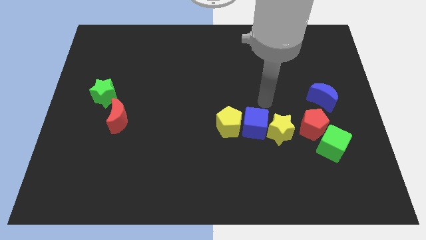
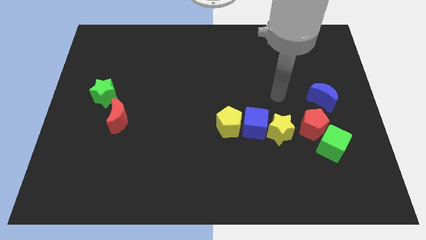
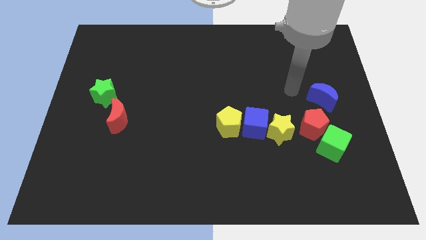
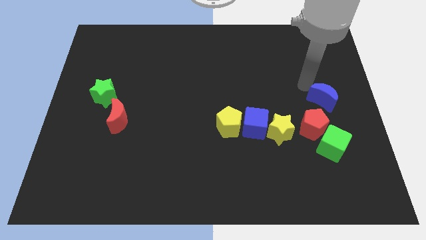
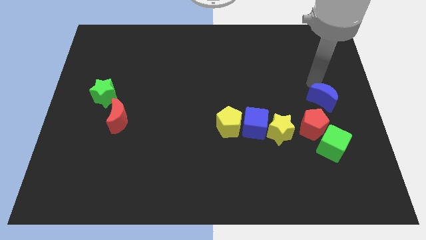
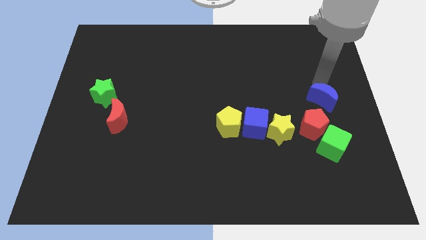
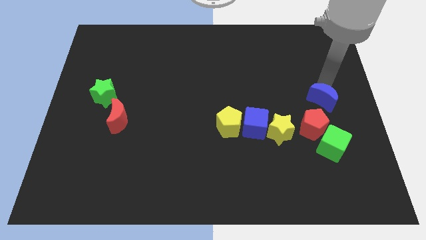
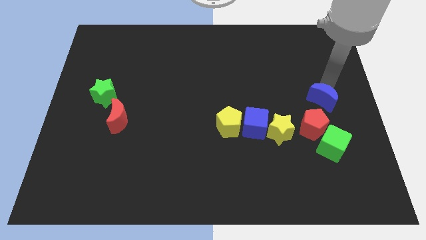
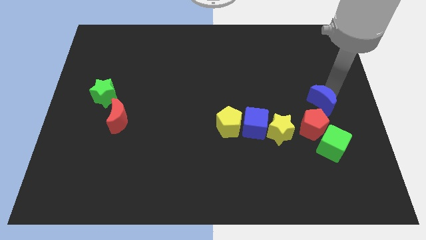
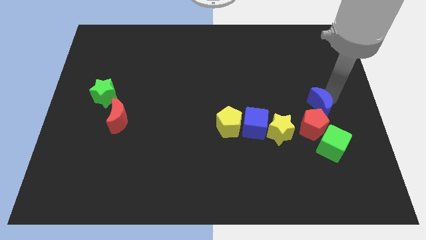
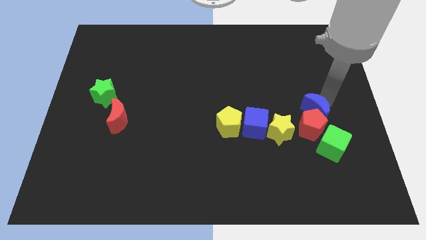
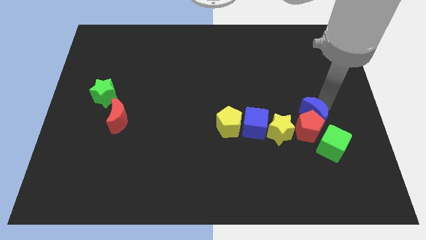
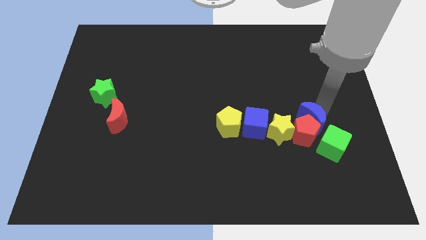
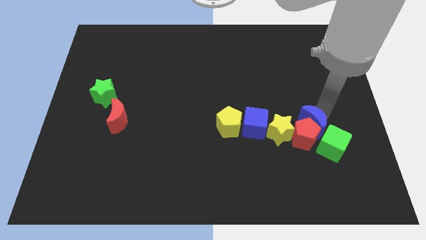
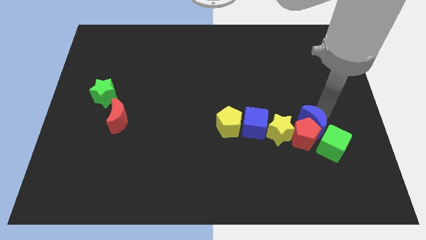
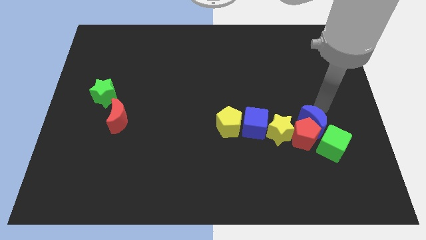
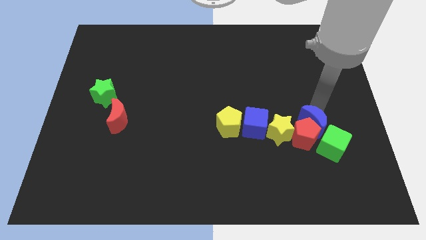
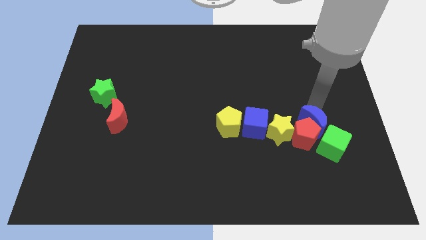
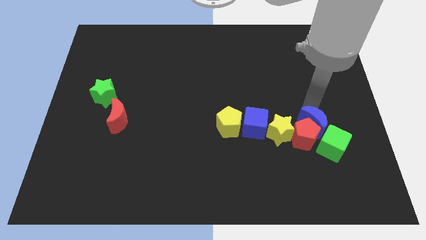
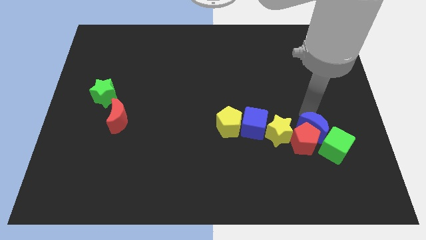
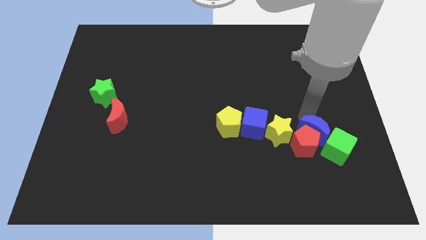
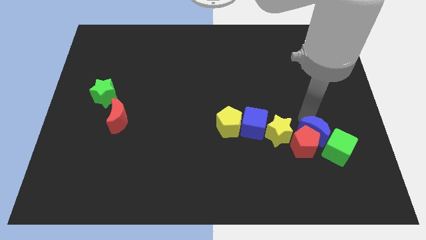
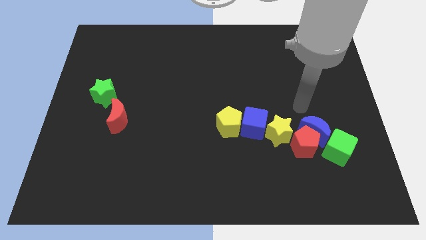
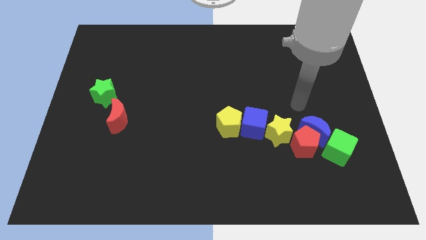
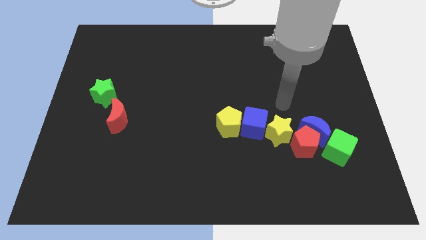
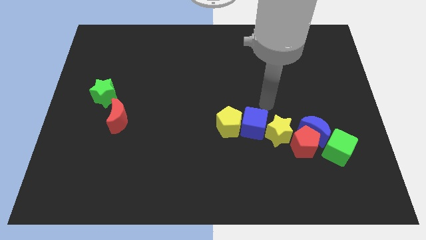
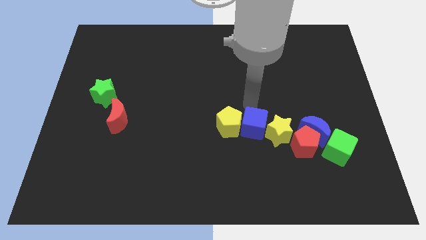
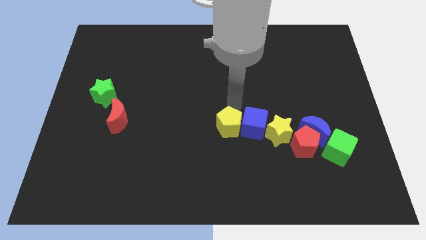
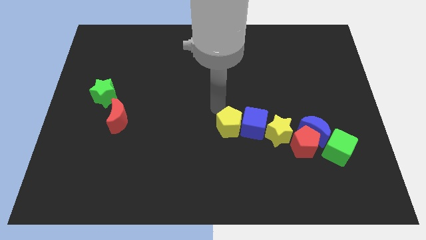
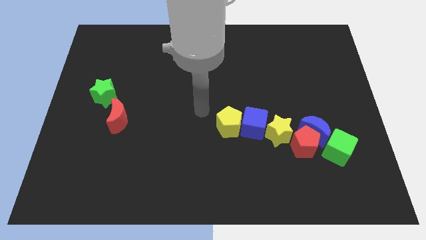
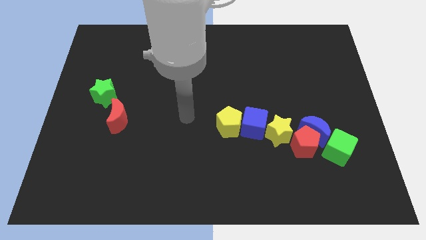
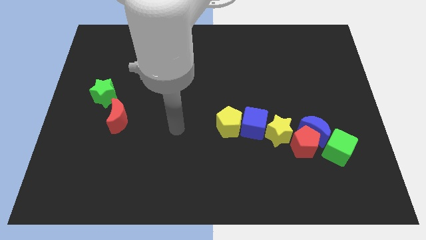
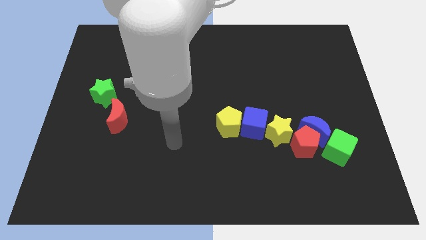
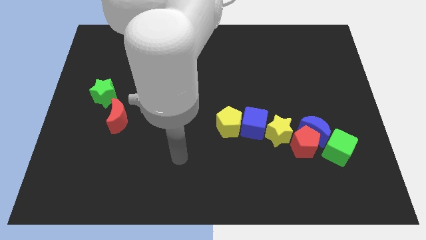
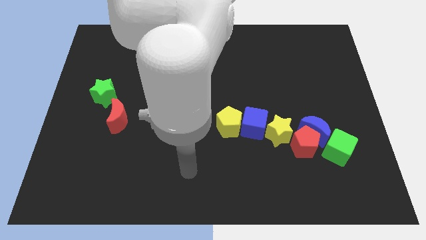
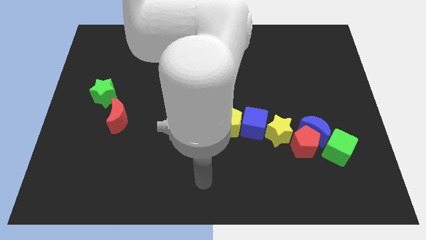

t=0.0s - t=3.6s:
push the blue moon into the red pentagon

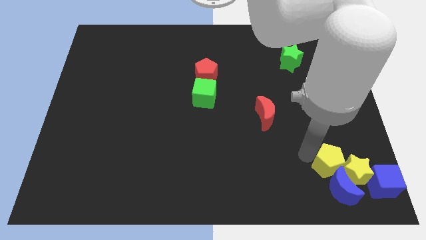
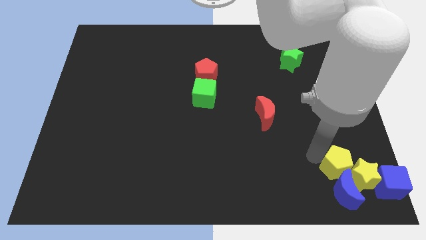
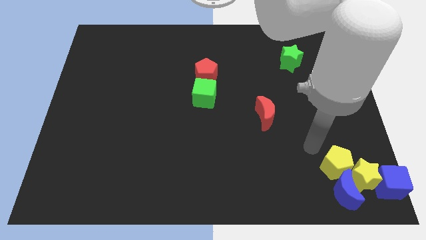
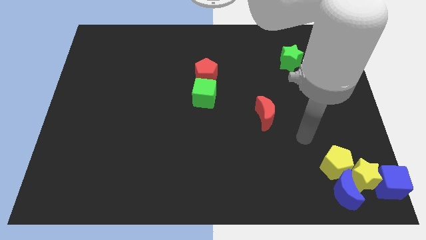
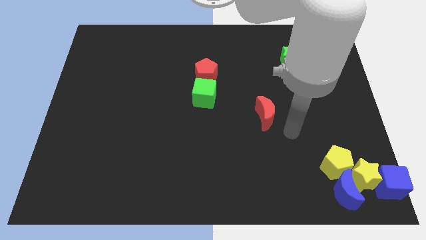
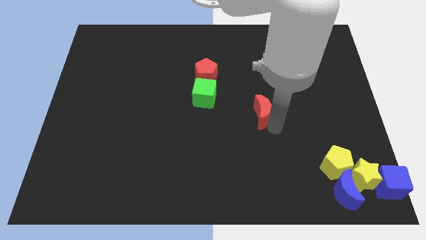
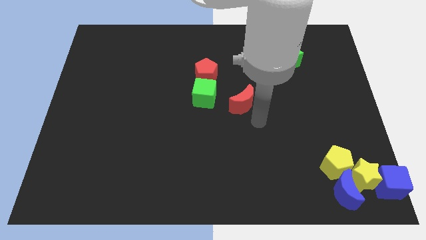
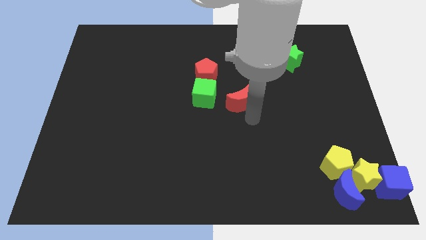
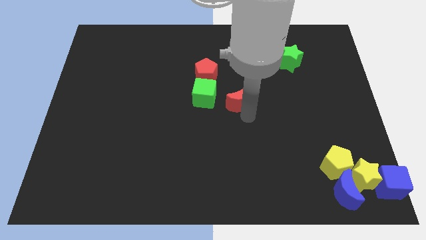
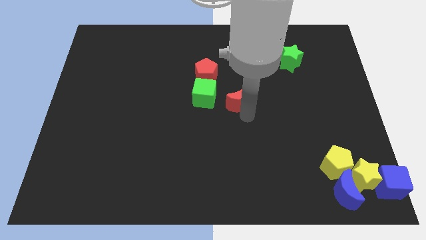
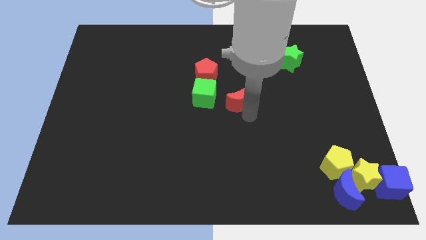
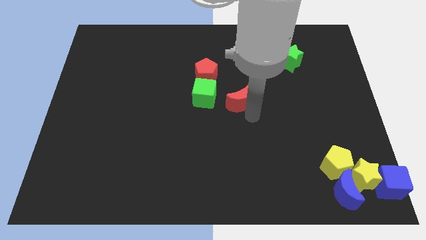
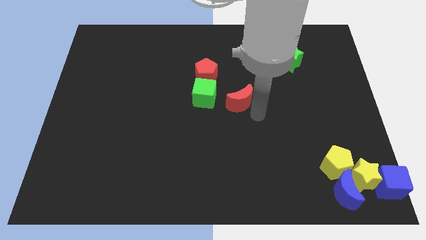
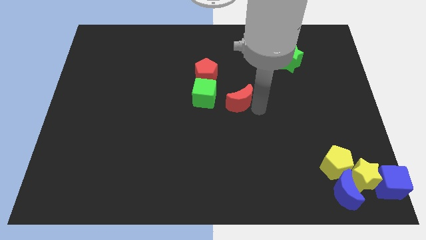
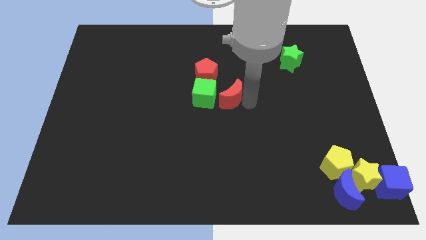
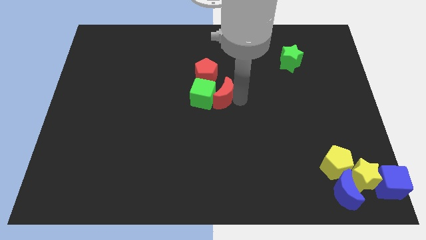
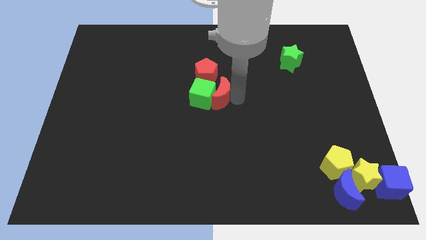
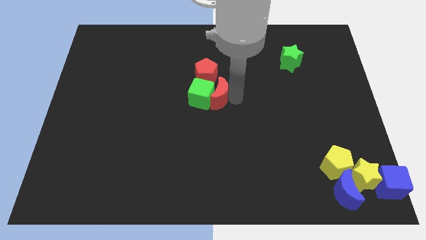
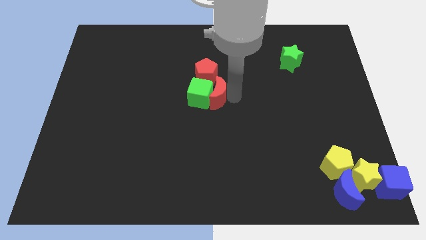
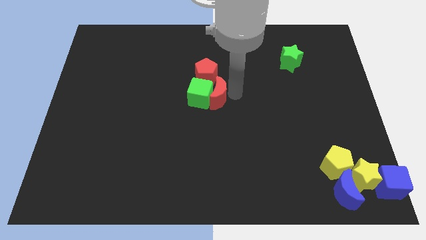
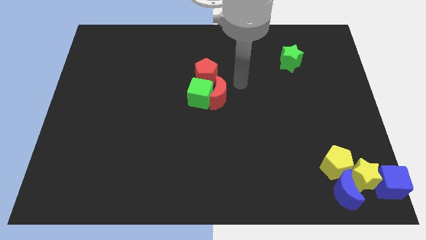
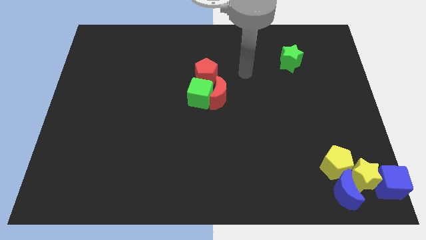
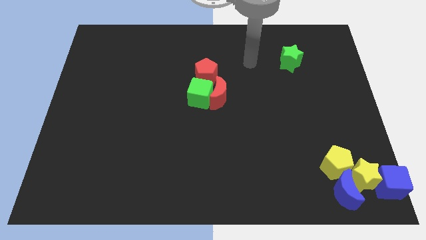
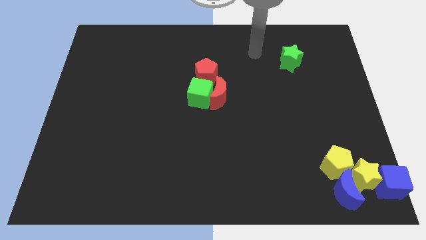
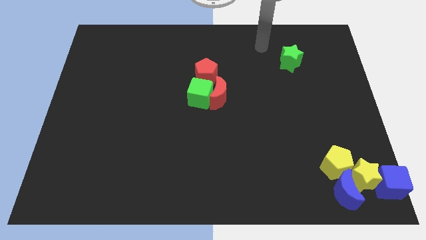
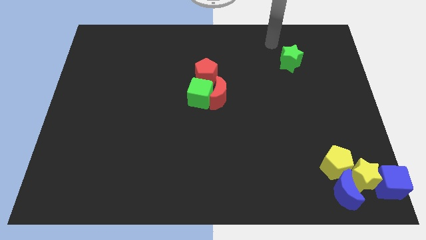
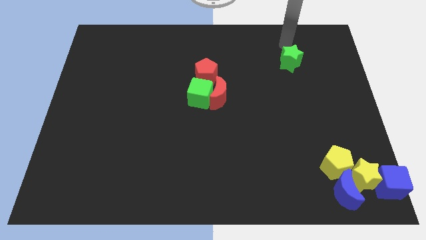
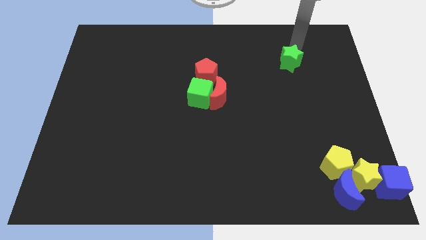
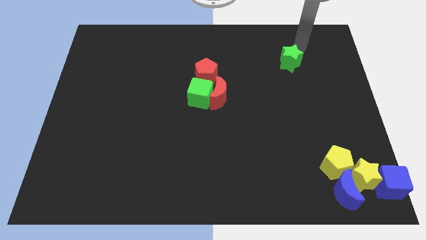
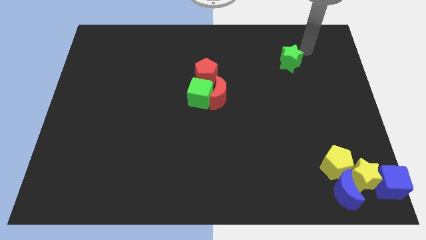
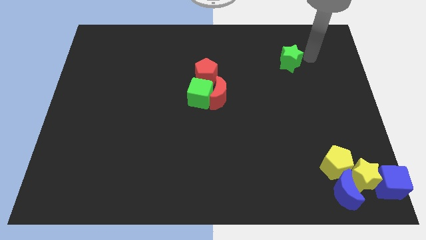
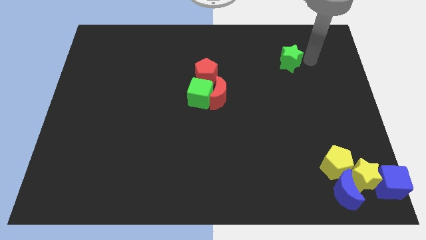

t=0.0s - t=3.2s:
push the red crescent to the right side of the green cube

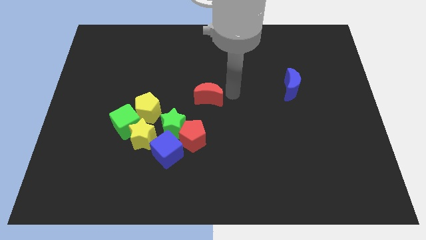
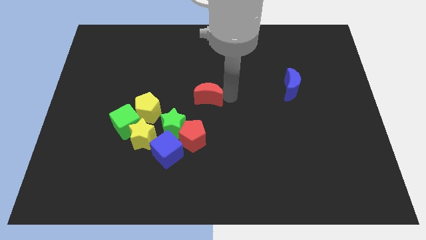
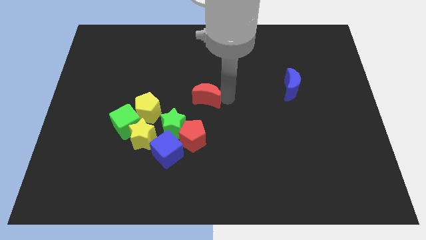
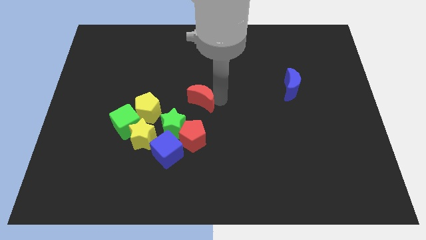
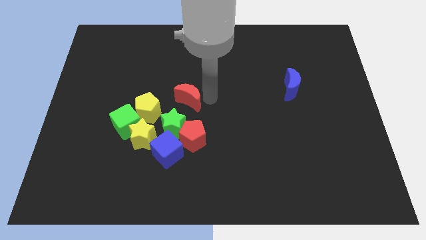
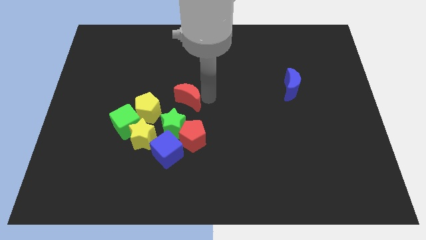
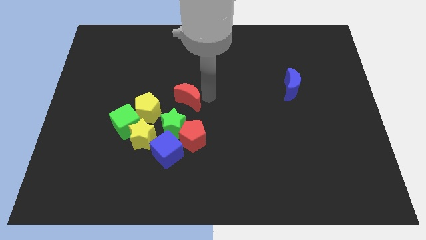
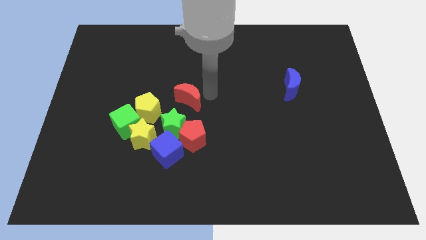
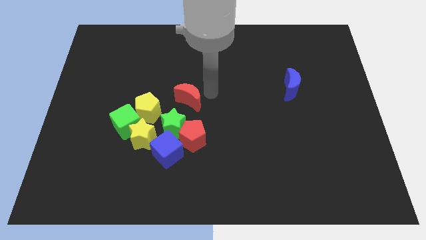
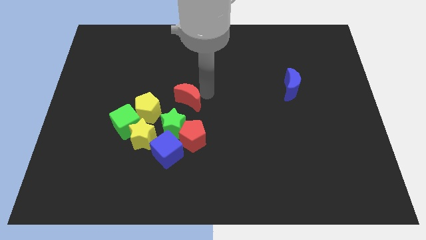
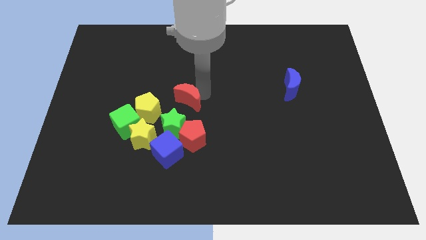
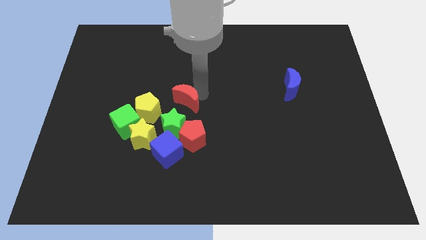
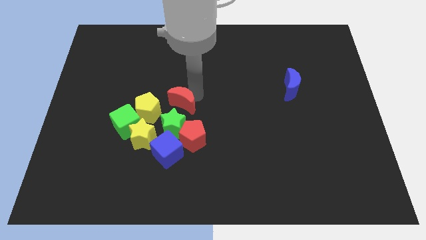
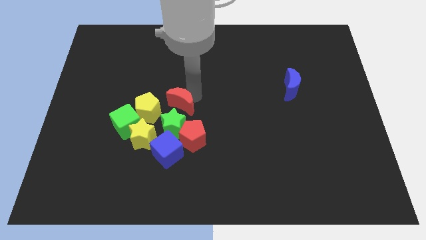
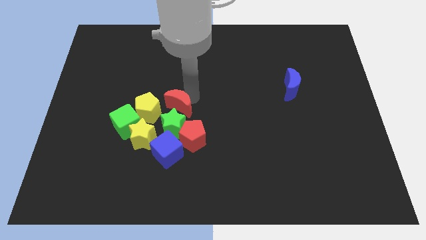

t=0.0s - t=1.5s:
move the red moon diagonally top right to yellow pentagon

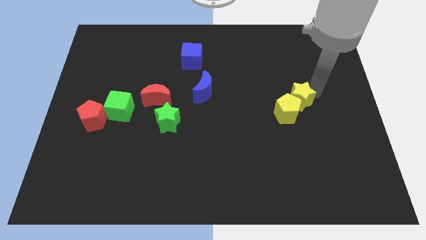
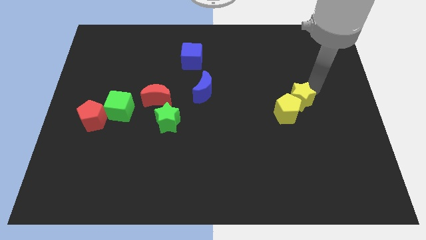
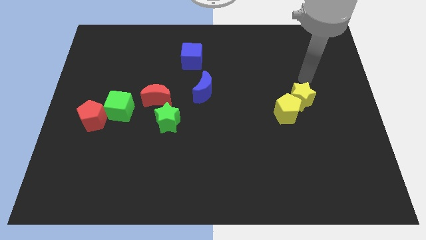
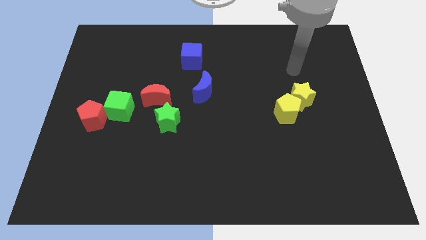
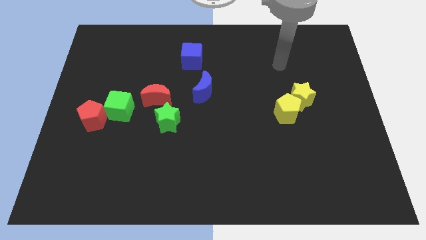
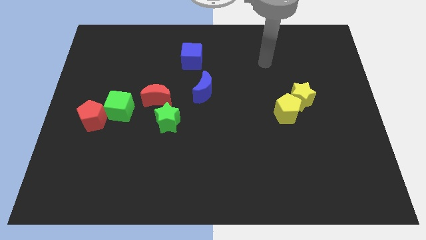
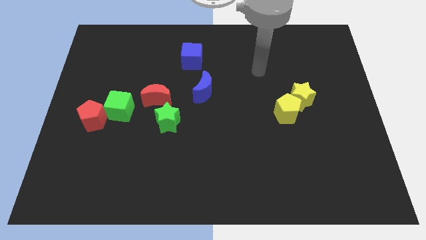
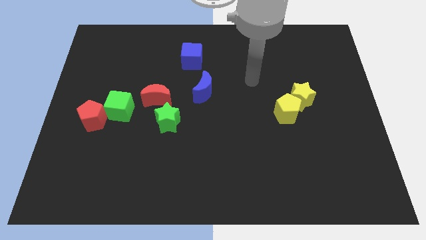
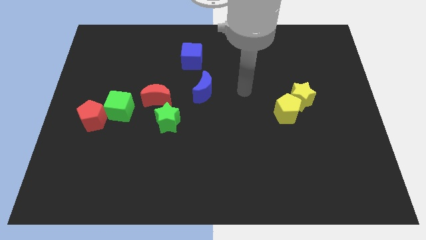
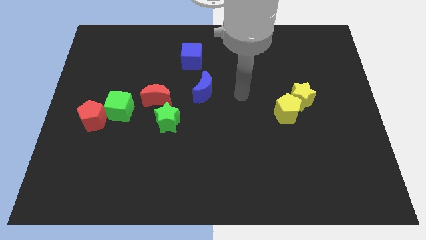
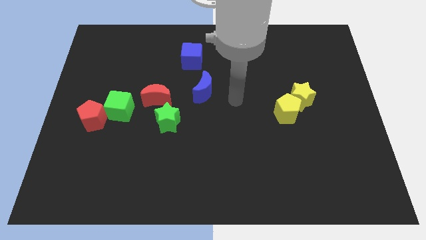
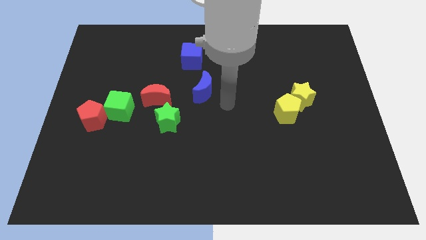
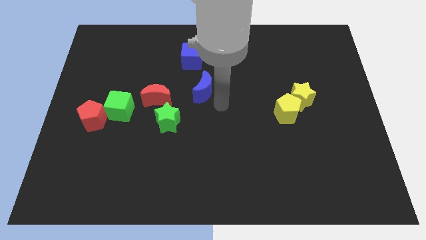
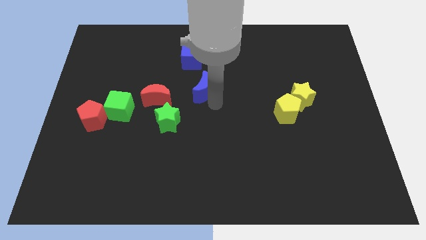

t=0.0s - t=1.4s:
move arm away from yellow star
